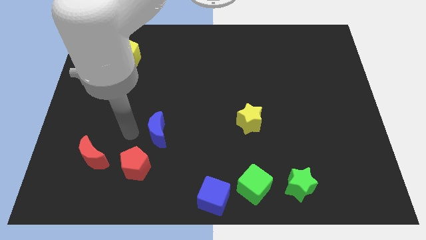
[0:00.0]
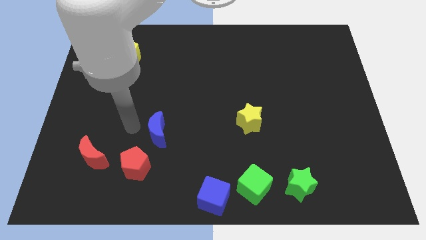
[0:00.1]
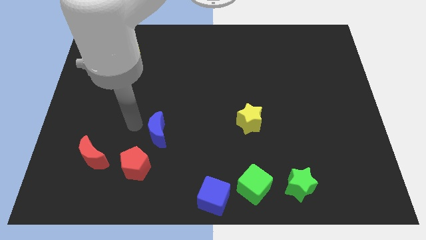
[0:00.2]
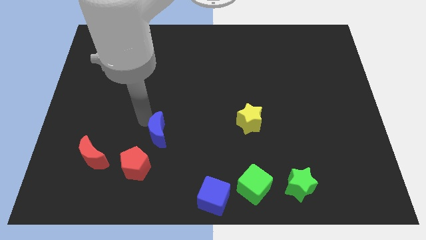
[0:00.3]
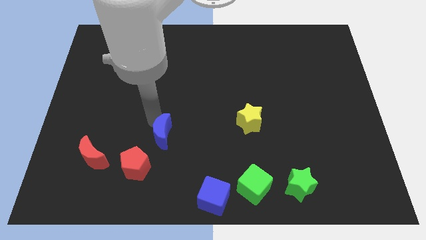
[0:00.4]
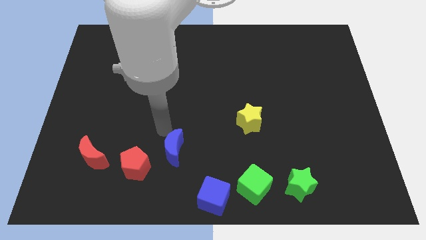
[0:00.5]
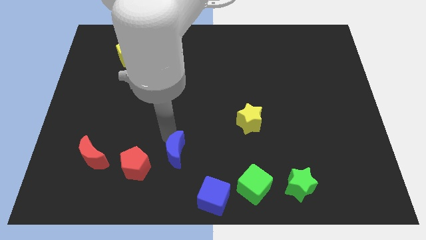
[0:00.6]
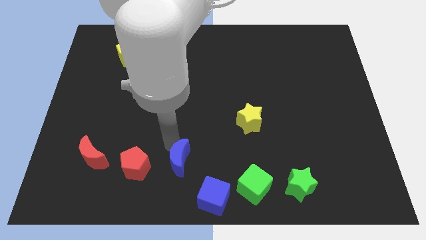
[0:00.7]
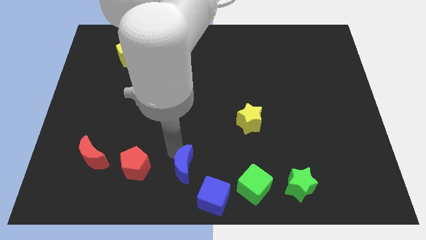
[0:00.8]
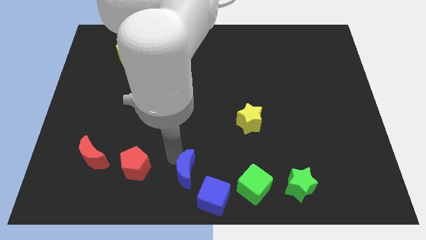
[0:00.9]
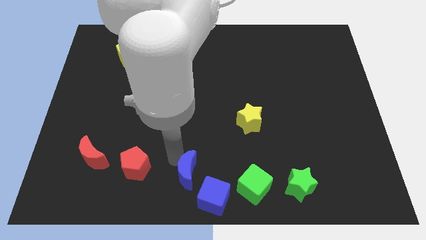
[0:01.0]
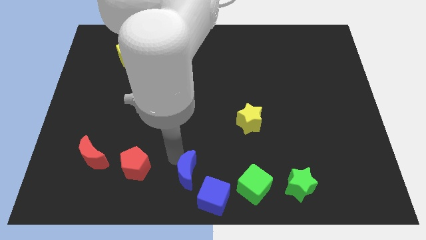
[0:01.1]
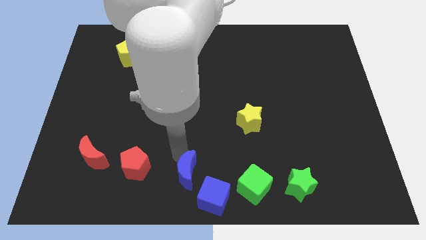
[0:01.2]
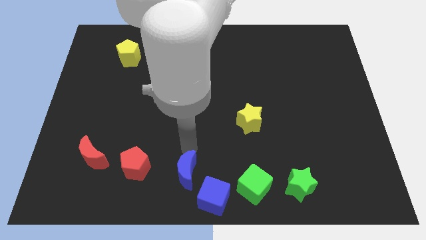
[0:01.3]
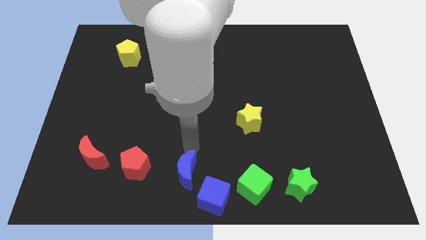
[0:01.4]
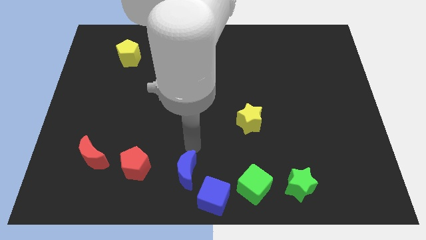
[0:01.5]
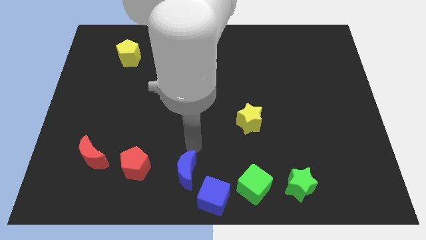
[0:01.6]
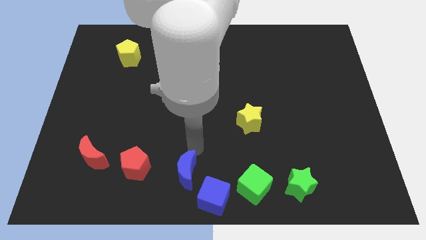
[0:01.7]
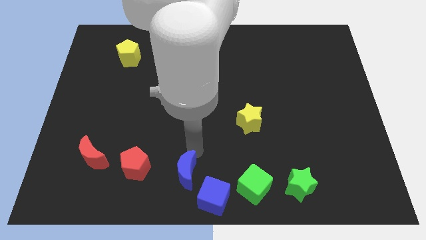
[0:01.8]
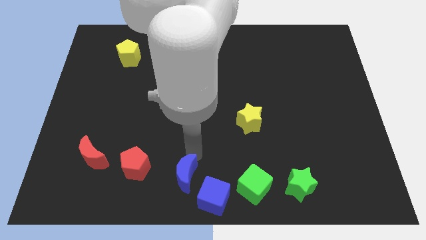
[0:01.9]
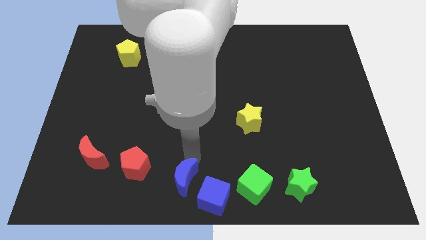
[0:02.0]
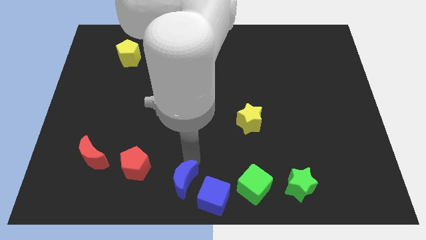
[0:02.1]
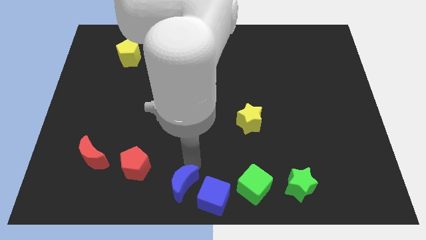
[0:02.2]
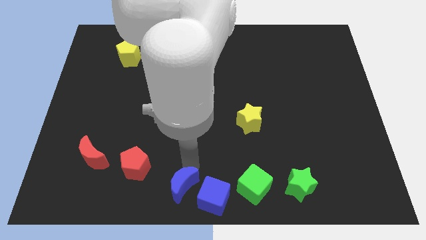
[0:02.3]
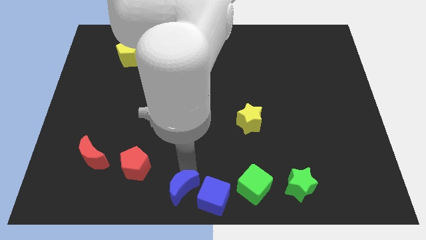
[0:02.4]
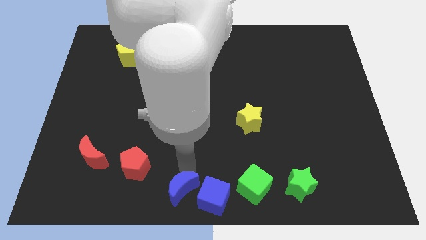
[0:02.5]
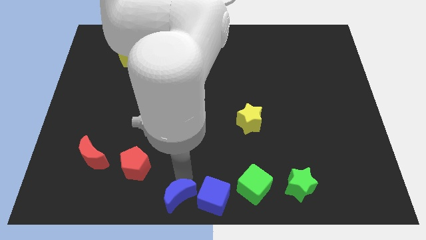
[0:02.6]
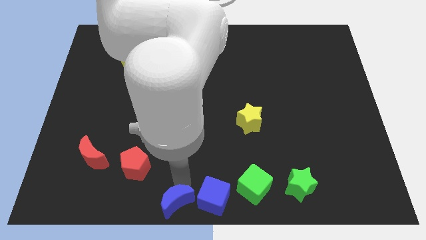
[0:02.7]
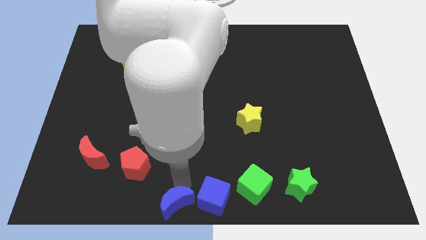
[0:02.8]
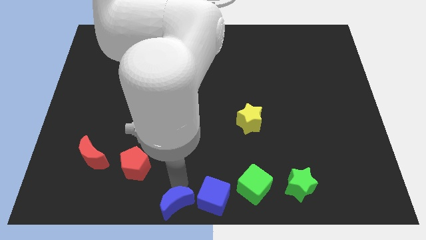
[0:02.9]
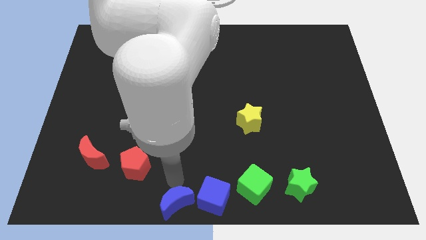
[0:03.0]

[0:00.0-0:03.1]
move the blue crescent to the left of the blue cube

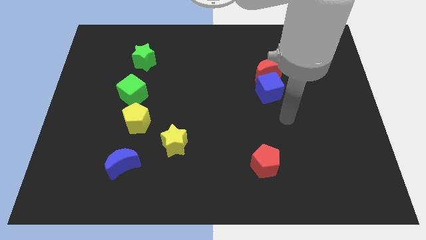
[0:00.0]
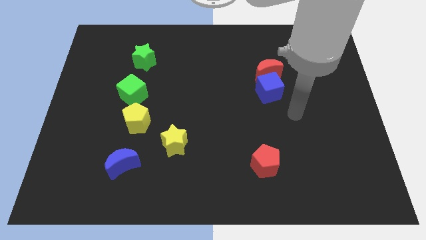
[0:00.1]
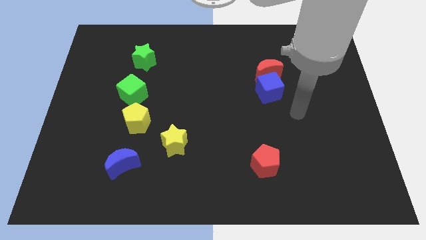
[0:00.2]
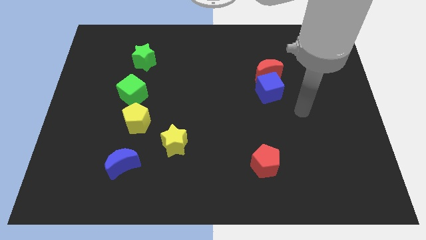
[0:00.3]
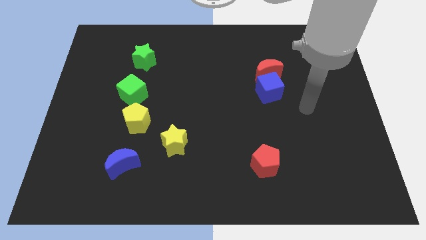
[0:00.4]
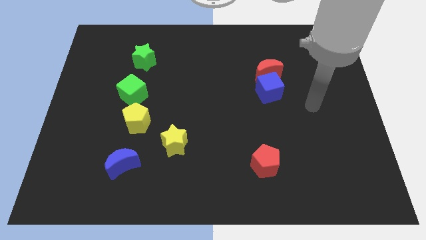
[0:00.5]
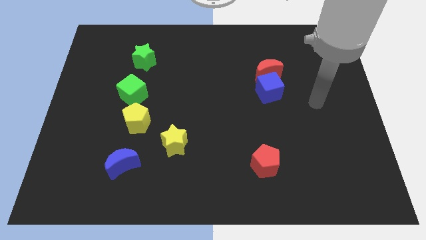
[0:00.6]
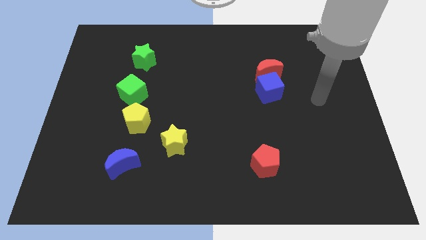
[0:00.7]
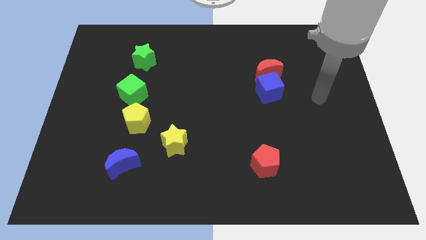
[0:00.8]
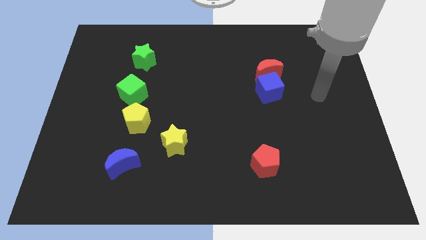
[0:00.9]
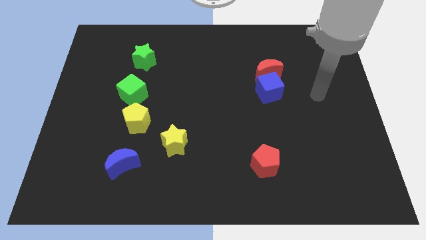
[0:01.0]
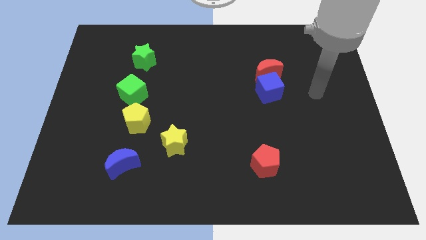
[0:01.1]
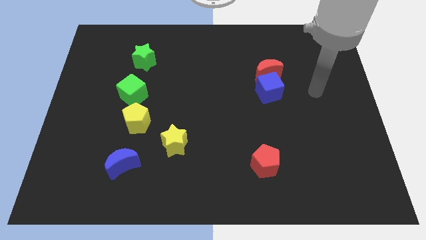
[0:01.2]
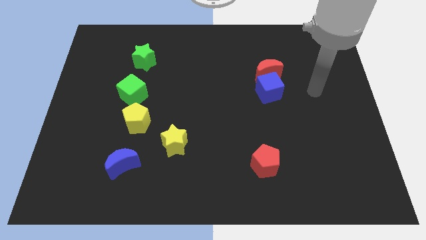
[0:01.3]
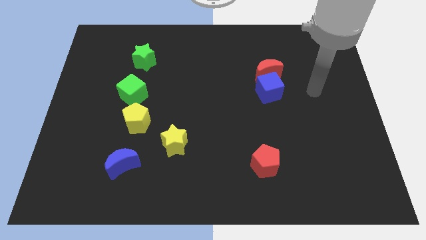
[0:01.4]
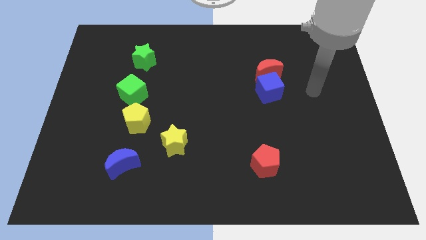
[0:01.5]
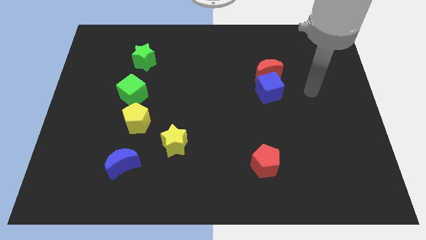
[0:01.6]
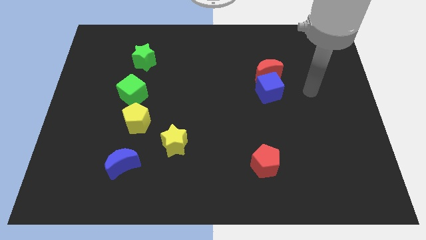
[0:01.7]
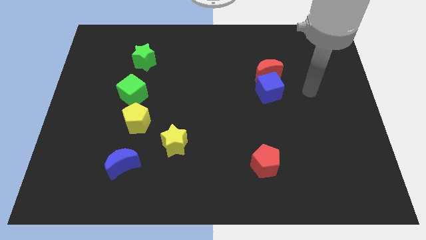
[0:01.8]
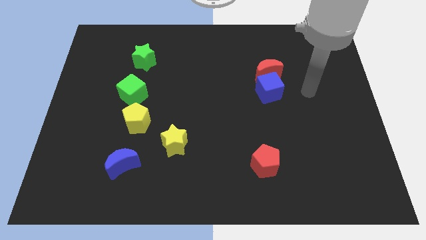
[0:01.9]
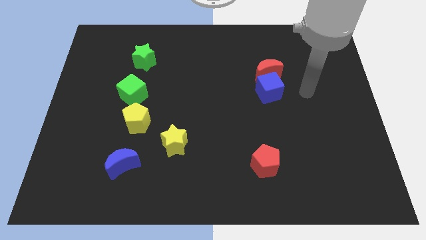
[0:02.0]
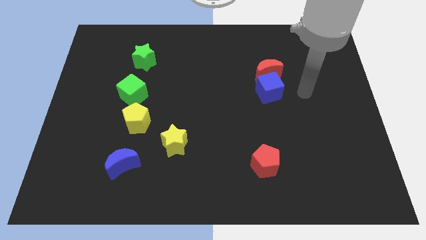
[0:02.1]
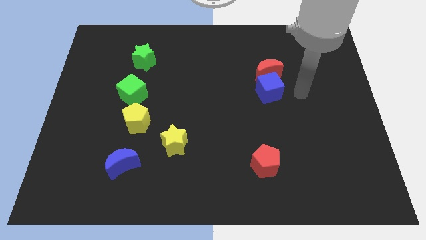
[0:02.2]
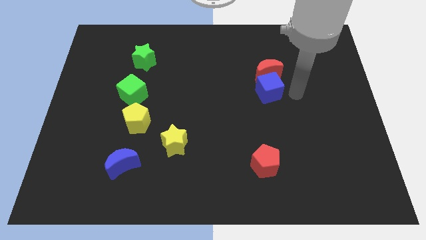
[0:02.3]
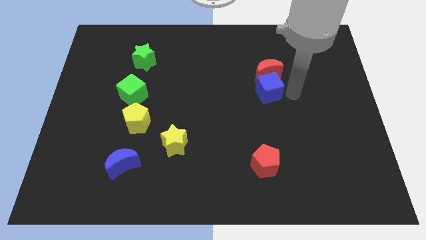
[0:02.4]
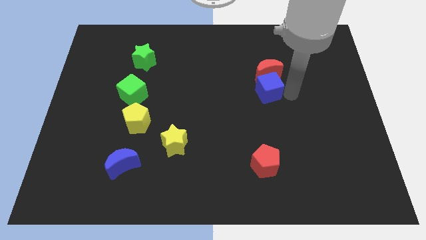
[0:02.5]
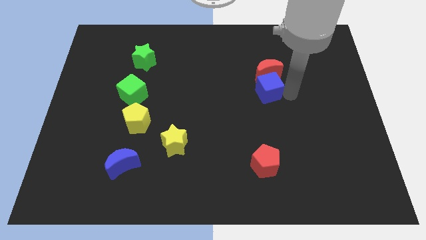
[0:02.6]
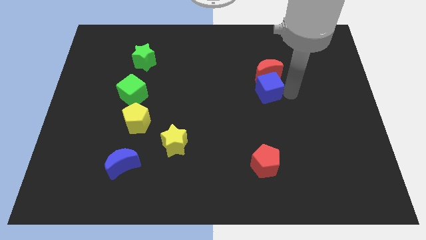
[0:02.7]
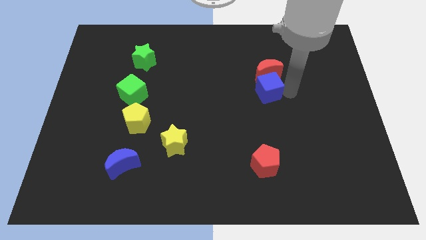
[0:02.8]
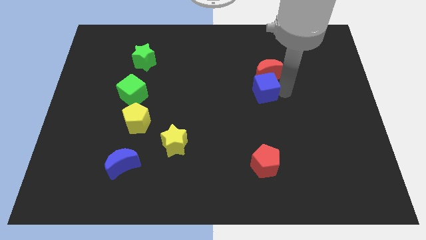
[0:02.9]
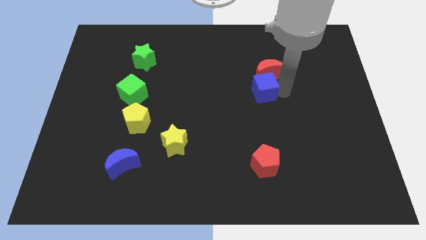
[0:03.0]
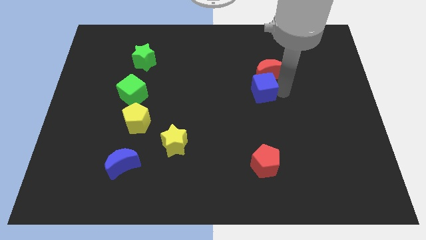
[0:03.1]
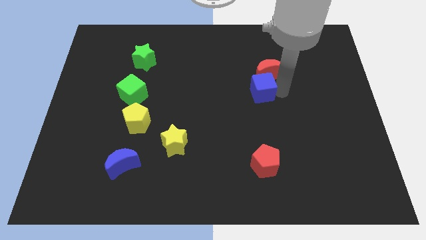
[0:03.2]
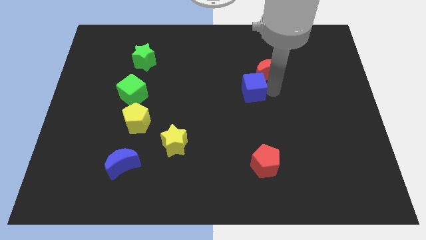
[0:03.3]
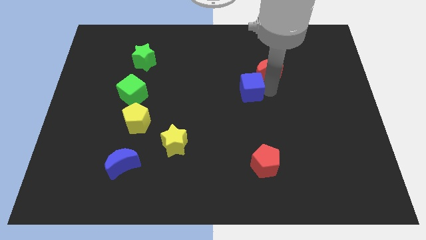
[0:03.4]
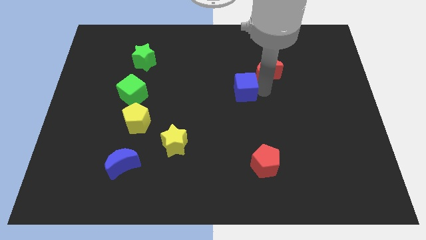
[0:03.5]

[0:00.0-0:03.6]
place the blue cube at the bottom left of the red moon

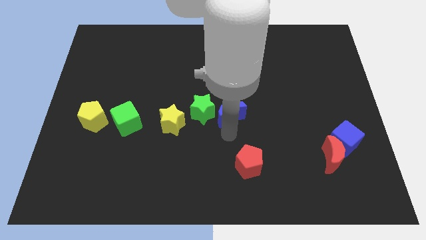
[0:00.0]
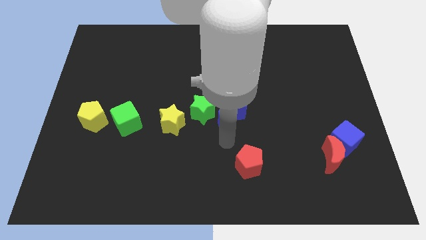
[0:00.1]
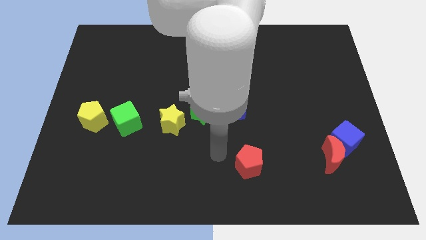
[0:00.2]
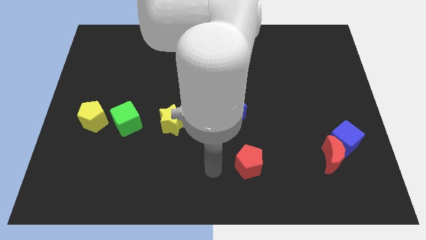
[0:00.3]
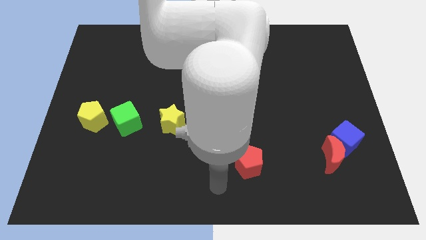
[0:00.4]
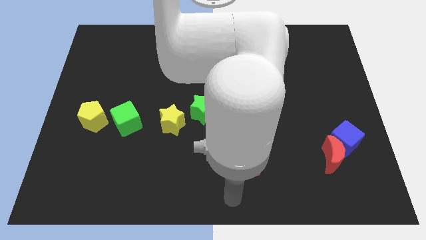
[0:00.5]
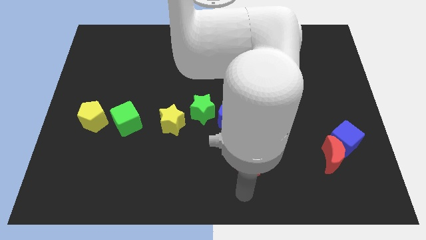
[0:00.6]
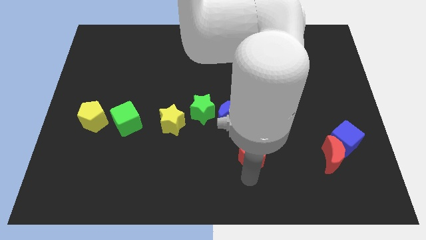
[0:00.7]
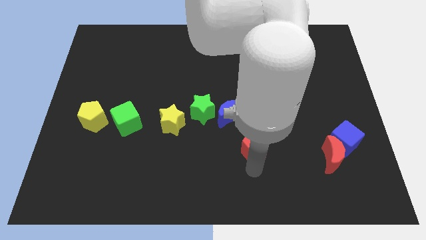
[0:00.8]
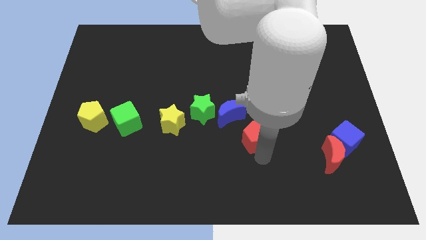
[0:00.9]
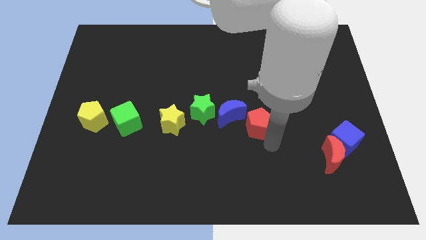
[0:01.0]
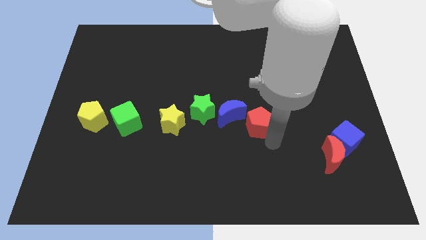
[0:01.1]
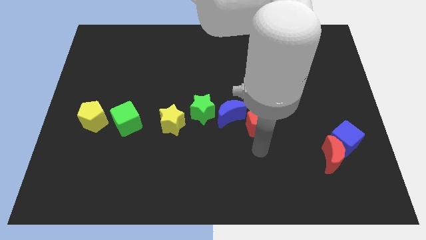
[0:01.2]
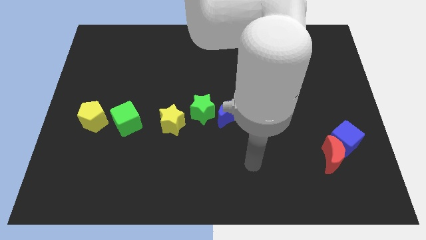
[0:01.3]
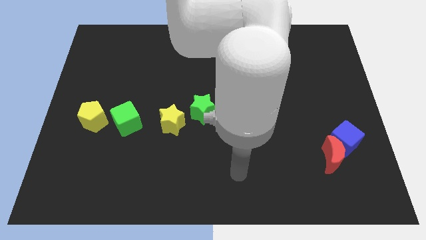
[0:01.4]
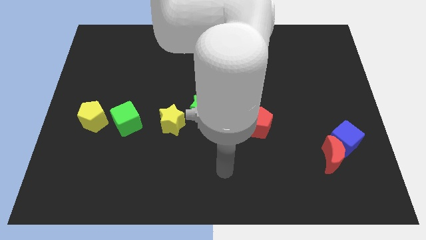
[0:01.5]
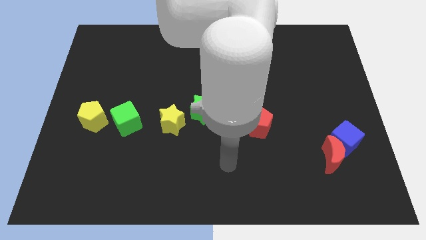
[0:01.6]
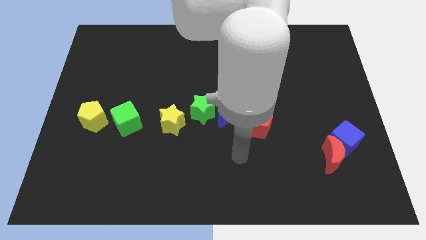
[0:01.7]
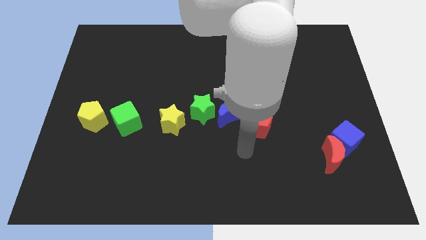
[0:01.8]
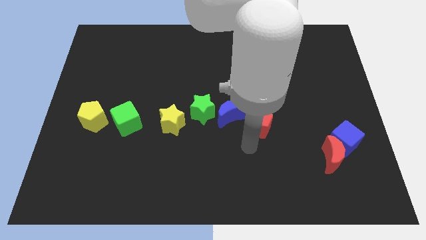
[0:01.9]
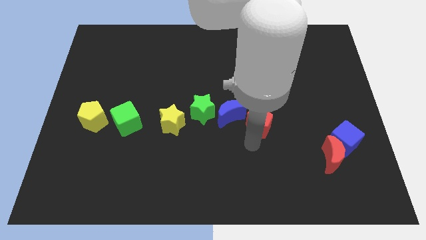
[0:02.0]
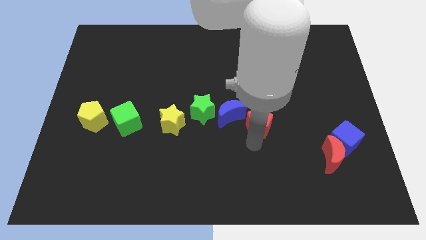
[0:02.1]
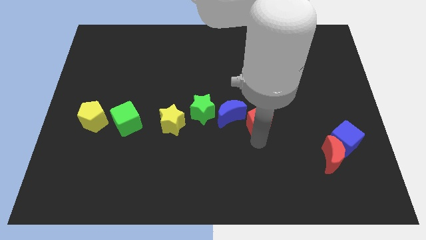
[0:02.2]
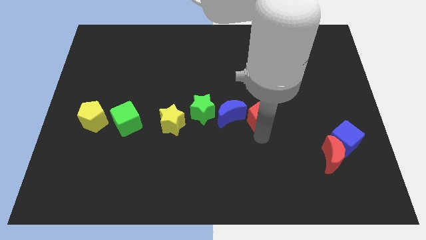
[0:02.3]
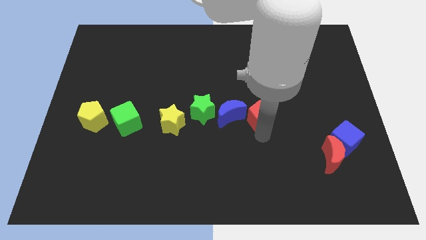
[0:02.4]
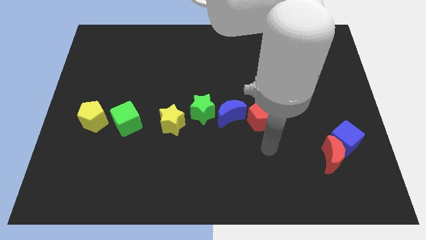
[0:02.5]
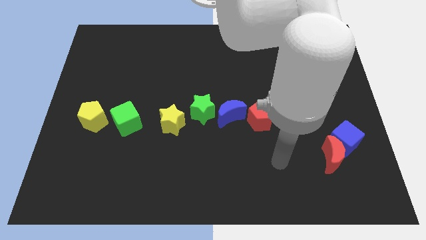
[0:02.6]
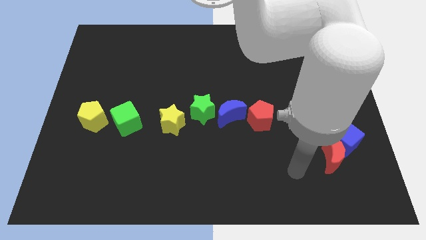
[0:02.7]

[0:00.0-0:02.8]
move the red pentagon to the right of the blue crescent
